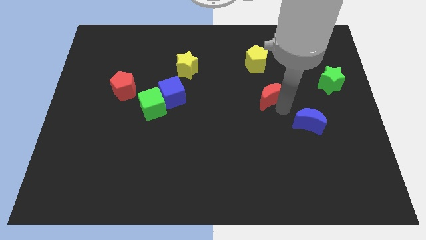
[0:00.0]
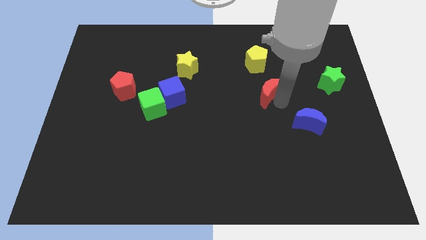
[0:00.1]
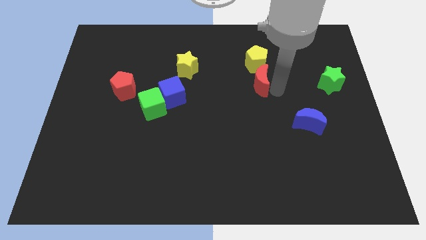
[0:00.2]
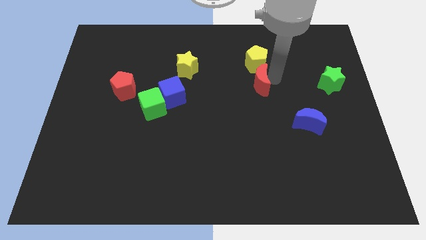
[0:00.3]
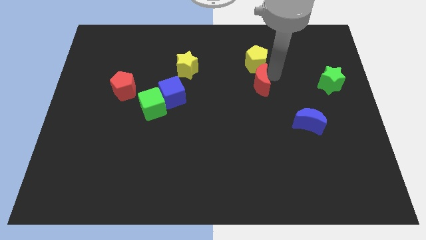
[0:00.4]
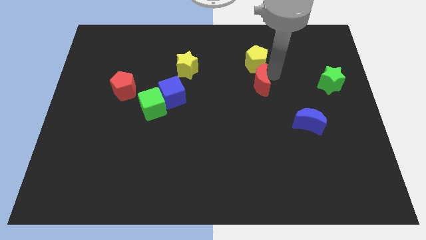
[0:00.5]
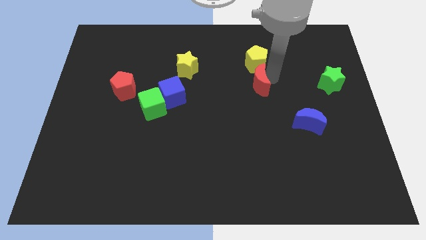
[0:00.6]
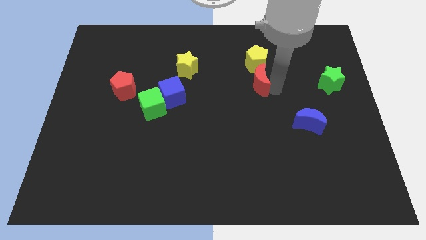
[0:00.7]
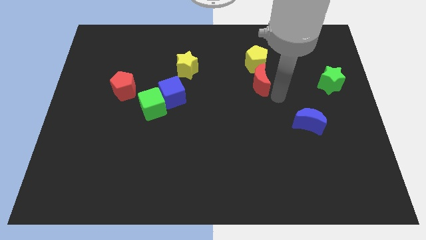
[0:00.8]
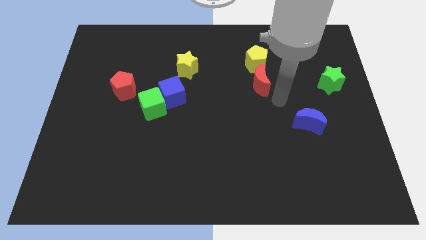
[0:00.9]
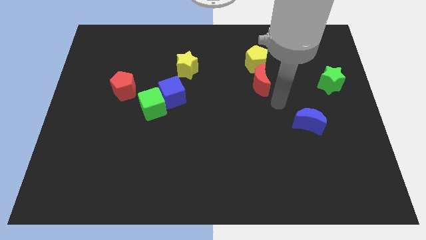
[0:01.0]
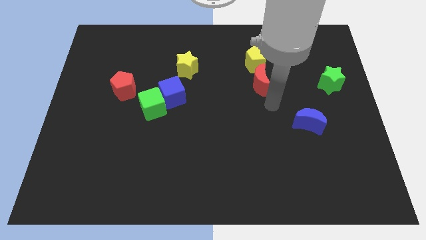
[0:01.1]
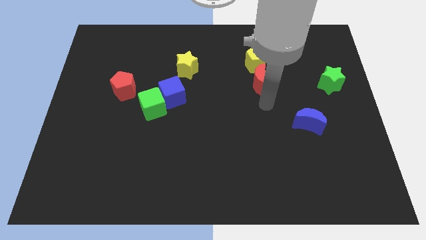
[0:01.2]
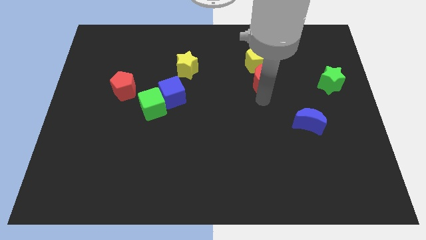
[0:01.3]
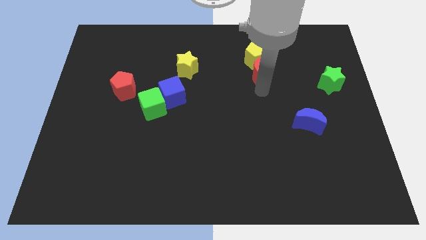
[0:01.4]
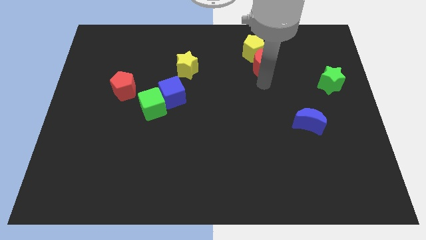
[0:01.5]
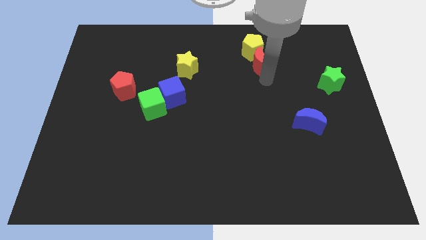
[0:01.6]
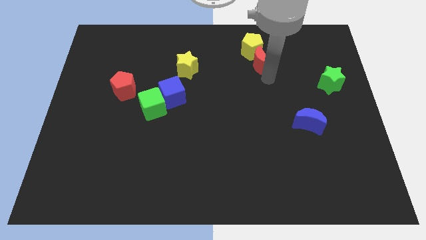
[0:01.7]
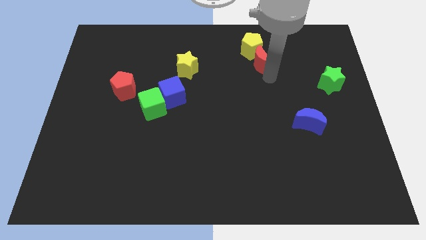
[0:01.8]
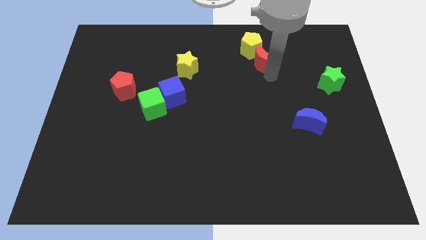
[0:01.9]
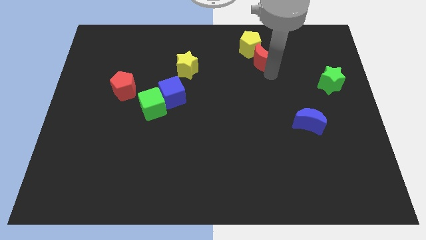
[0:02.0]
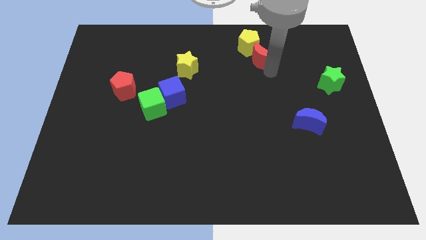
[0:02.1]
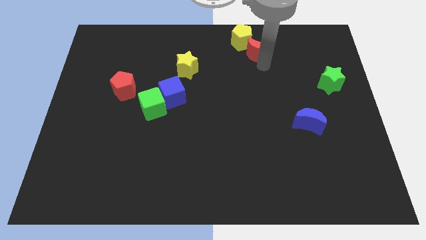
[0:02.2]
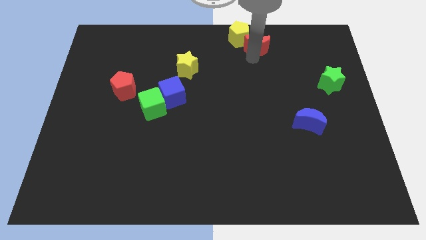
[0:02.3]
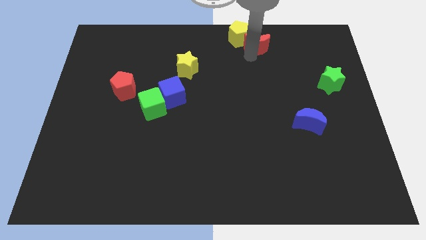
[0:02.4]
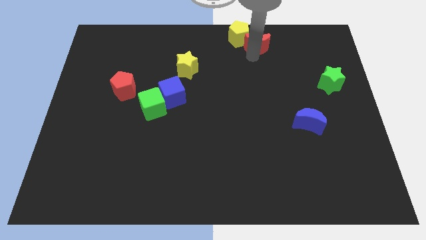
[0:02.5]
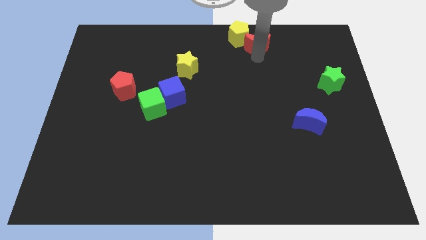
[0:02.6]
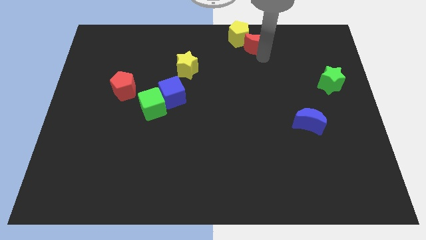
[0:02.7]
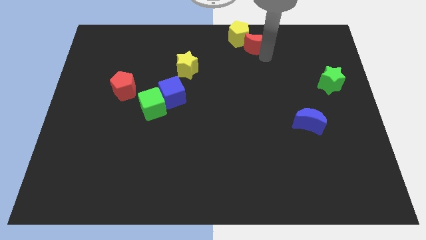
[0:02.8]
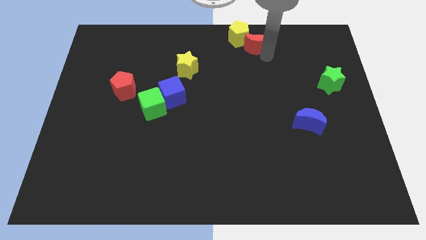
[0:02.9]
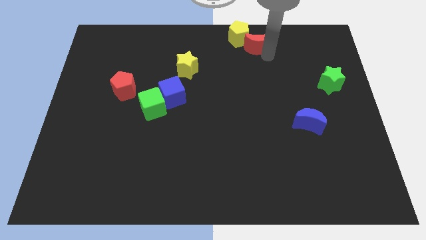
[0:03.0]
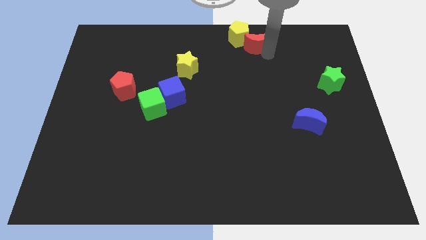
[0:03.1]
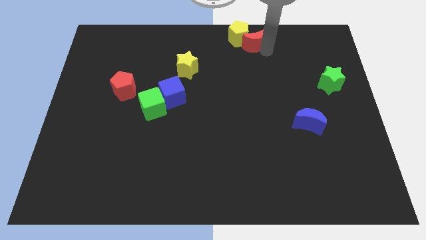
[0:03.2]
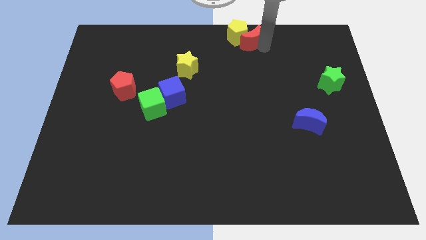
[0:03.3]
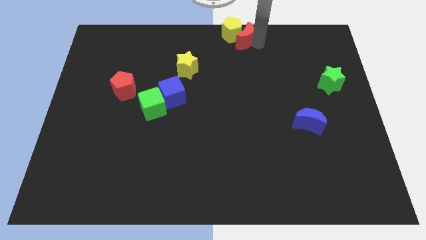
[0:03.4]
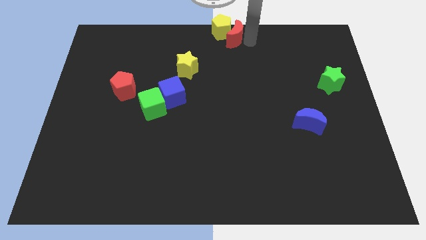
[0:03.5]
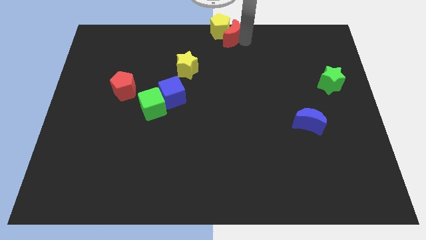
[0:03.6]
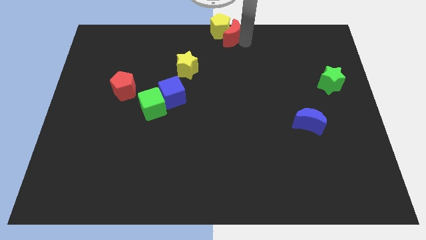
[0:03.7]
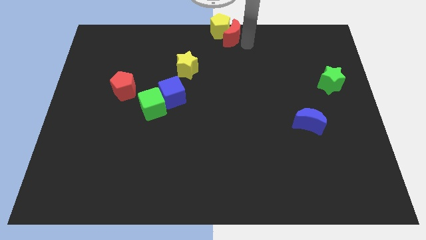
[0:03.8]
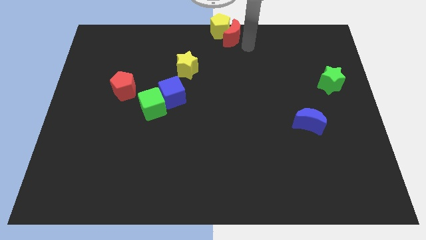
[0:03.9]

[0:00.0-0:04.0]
push the red crescent into the yellow pentagon

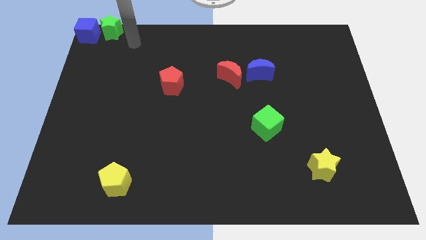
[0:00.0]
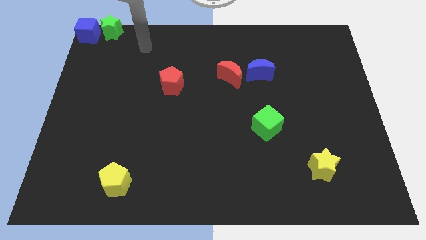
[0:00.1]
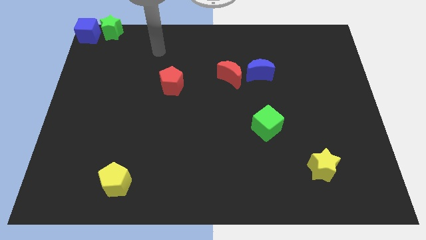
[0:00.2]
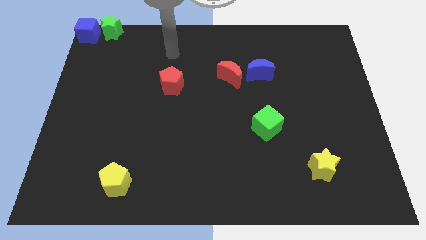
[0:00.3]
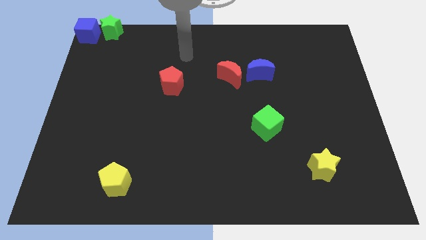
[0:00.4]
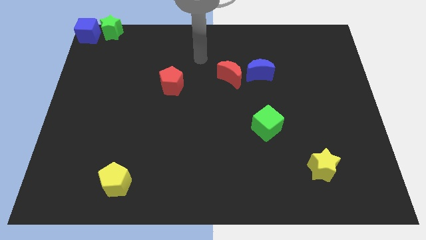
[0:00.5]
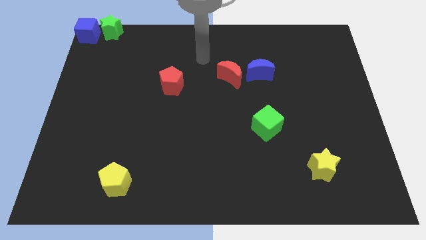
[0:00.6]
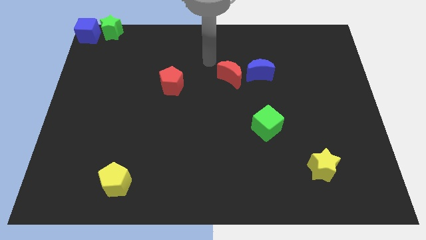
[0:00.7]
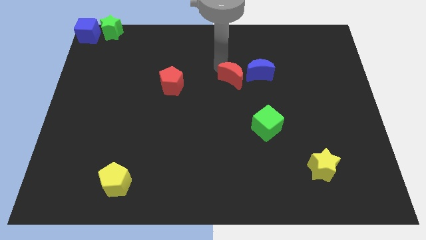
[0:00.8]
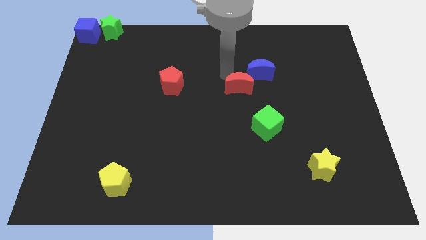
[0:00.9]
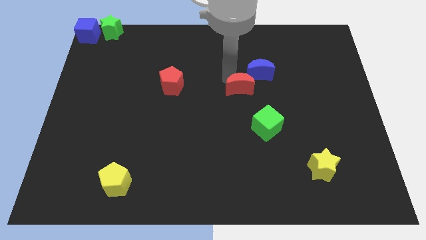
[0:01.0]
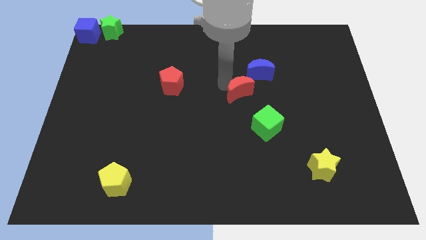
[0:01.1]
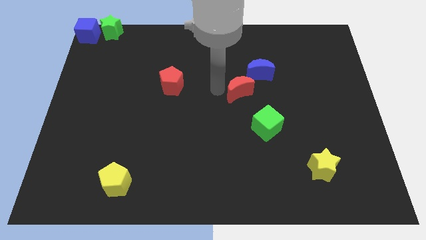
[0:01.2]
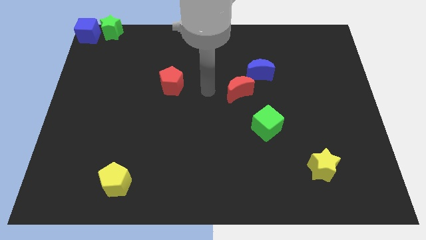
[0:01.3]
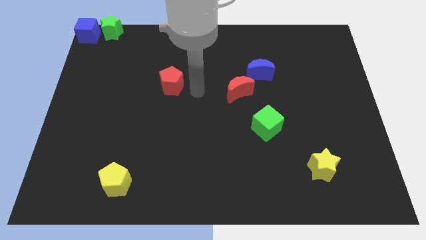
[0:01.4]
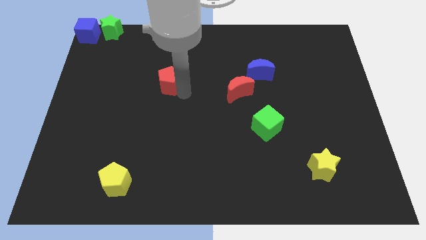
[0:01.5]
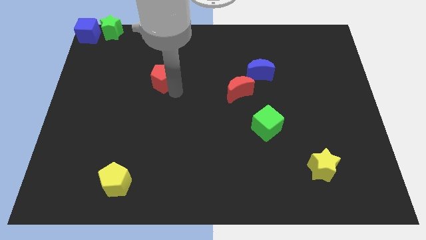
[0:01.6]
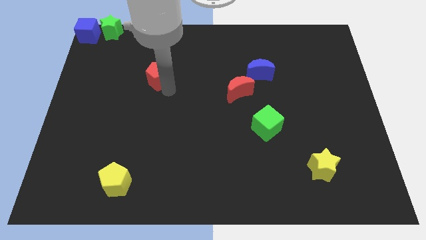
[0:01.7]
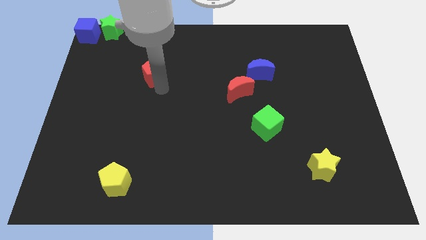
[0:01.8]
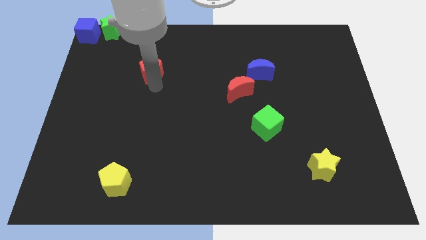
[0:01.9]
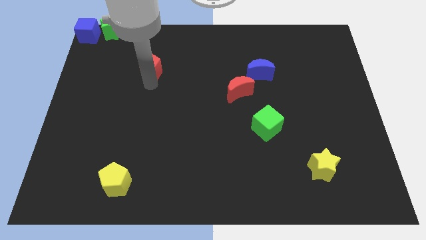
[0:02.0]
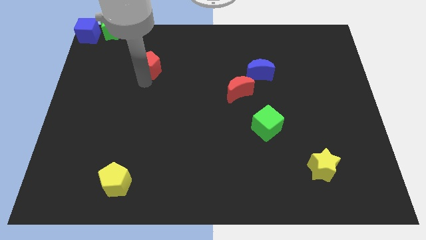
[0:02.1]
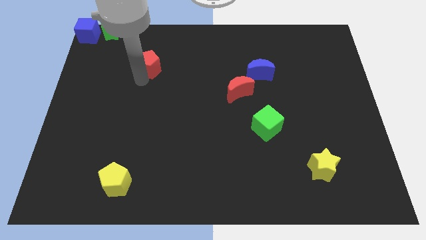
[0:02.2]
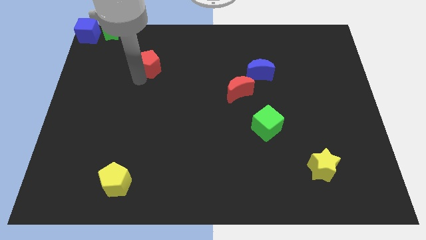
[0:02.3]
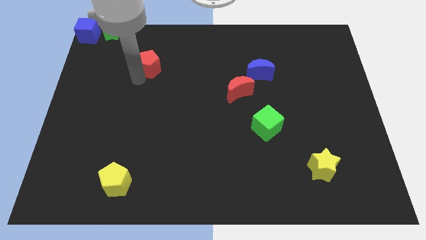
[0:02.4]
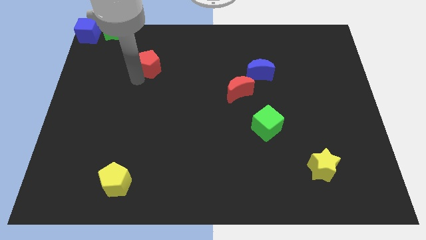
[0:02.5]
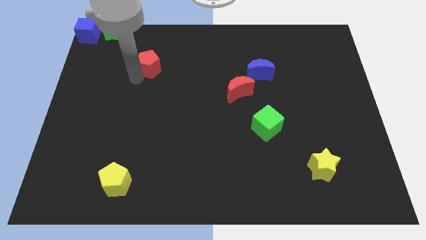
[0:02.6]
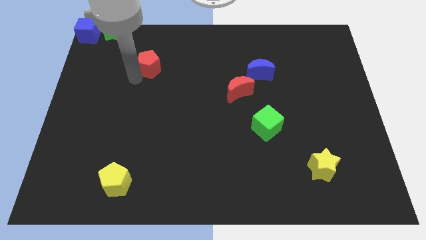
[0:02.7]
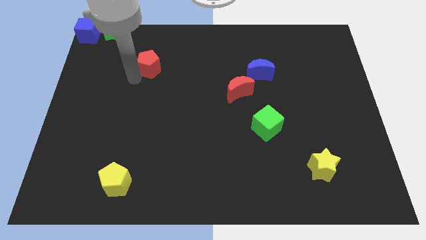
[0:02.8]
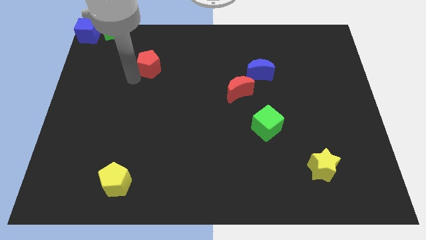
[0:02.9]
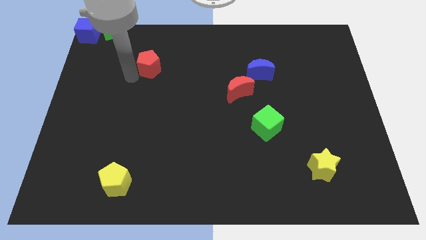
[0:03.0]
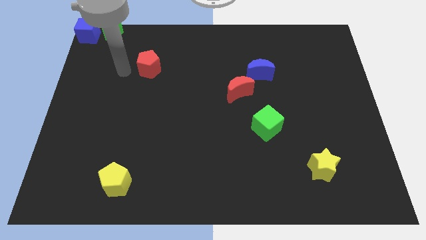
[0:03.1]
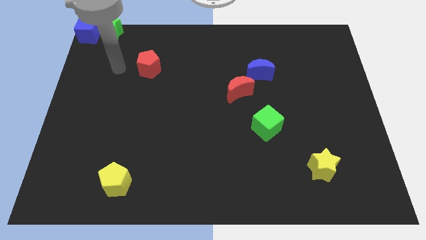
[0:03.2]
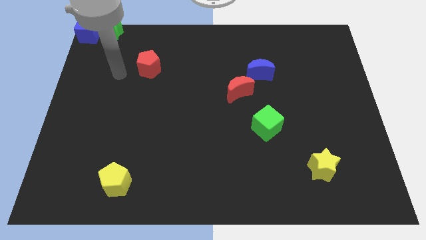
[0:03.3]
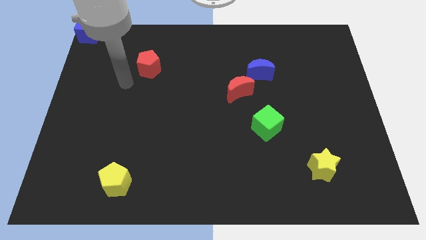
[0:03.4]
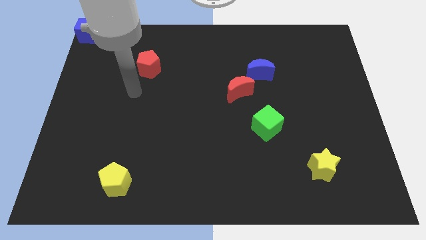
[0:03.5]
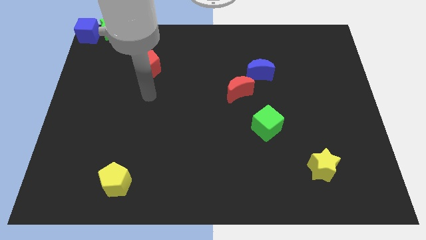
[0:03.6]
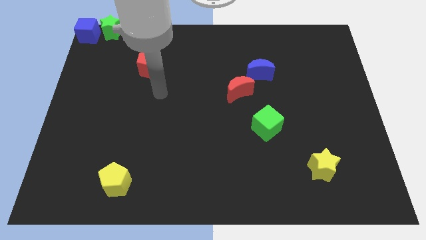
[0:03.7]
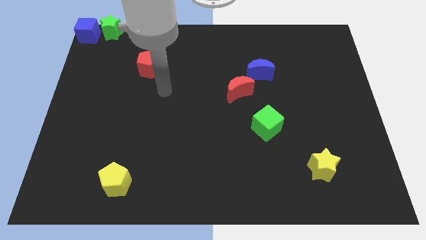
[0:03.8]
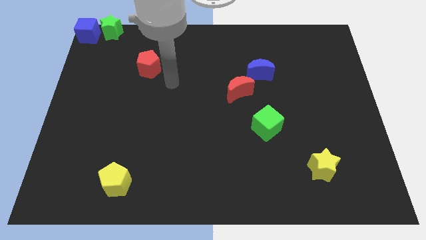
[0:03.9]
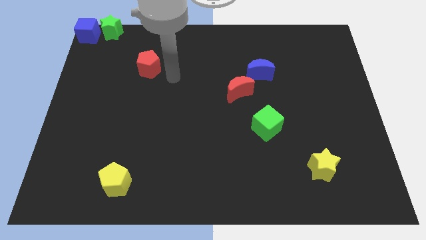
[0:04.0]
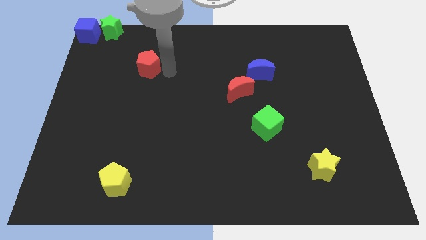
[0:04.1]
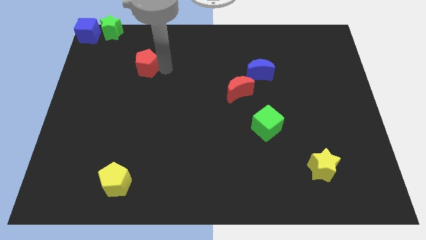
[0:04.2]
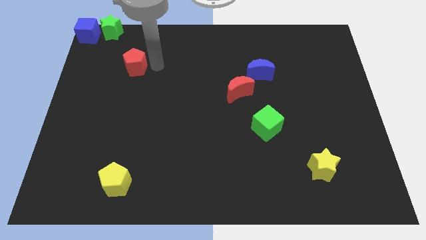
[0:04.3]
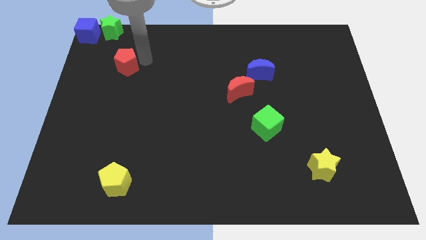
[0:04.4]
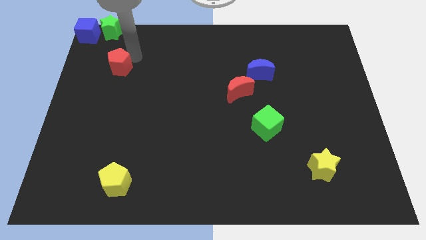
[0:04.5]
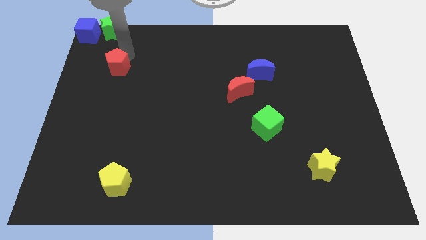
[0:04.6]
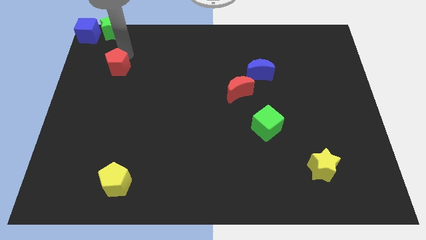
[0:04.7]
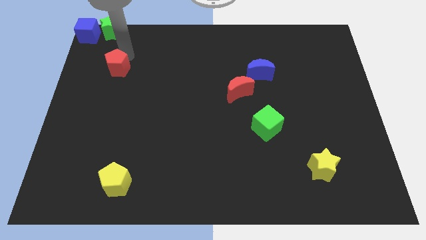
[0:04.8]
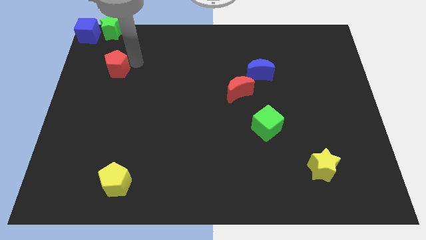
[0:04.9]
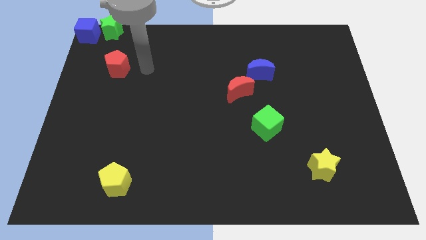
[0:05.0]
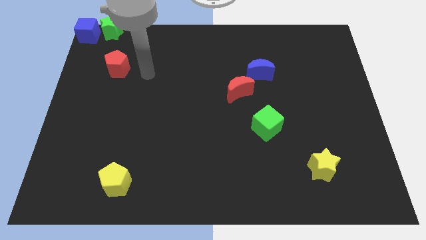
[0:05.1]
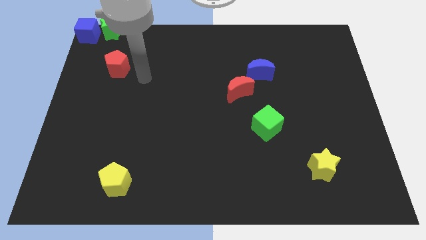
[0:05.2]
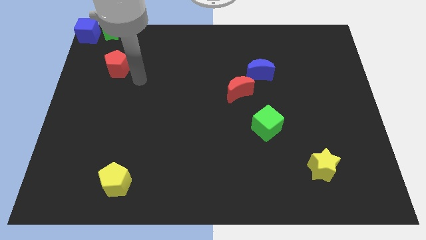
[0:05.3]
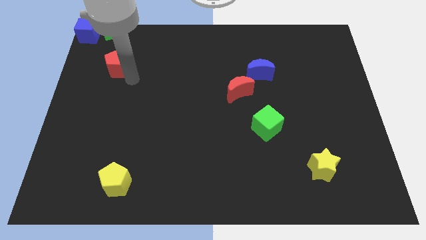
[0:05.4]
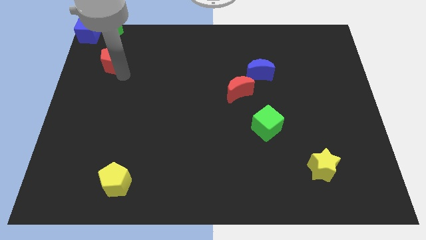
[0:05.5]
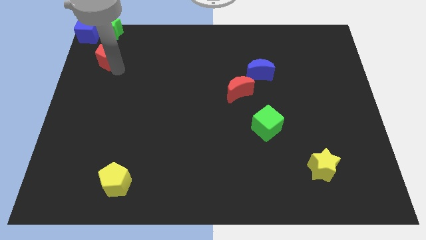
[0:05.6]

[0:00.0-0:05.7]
place the red pentagon vertically below the green star
